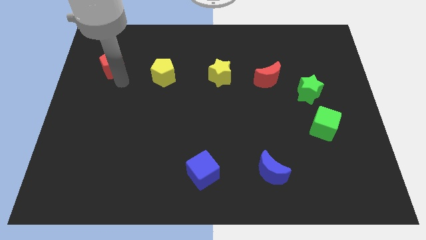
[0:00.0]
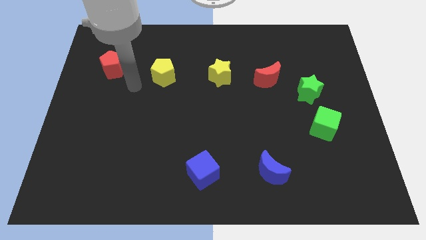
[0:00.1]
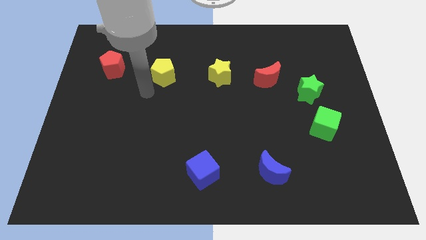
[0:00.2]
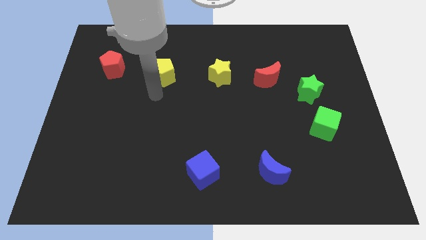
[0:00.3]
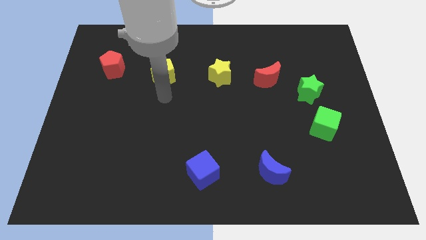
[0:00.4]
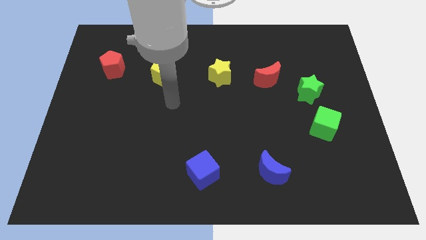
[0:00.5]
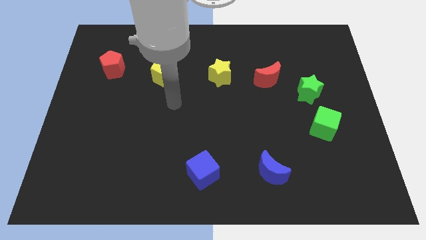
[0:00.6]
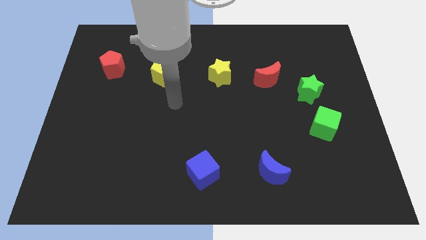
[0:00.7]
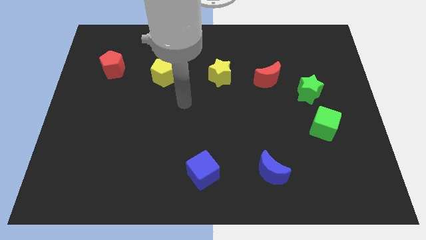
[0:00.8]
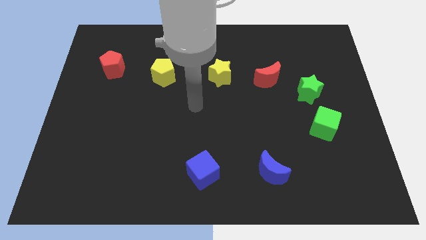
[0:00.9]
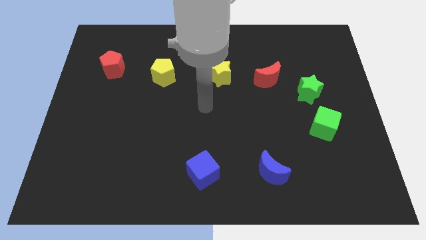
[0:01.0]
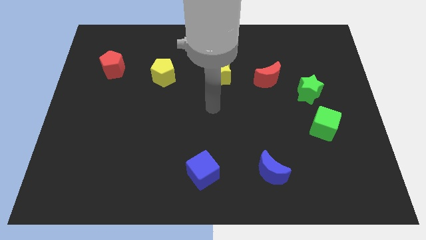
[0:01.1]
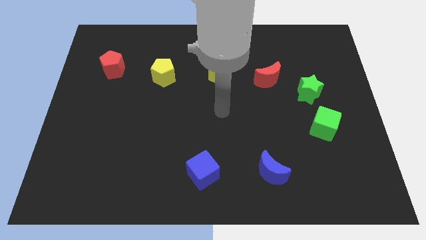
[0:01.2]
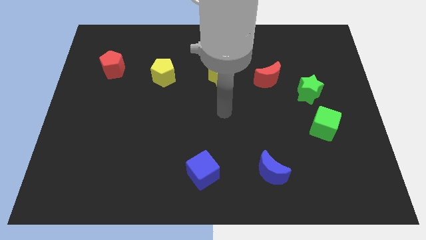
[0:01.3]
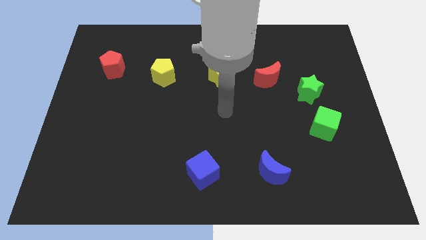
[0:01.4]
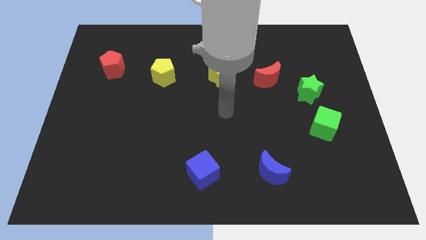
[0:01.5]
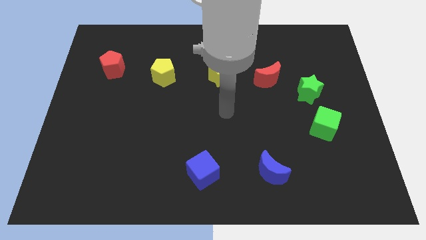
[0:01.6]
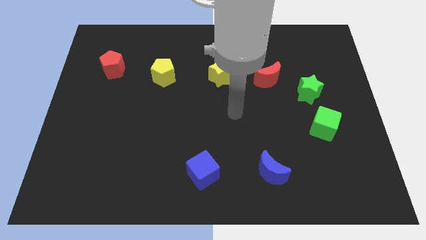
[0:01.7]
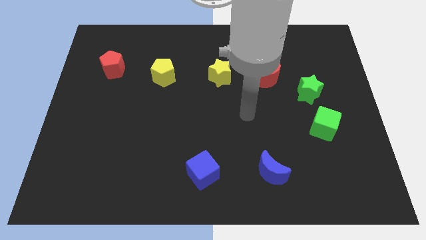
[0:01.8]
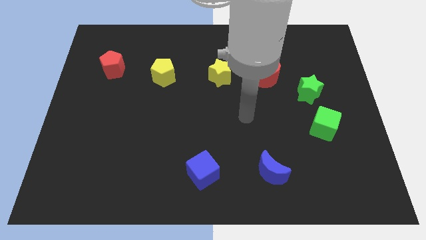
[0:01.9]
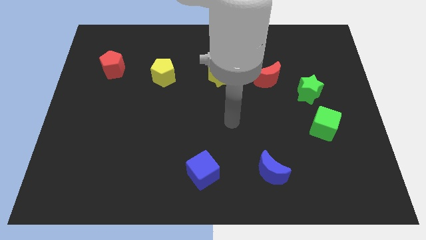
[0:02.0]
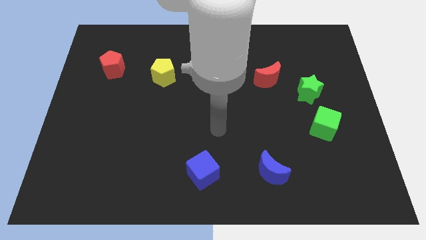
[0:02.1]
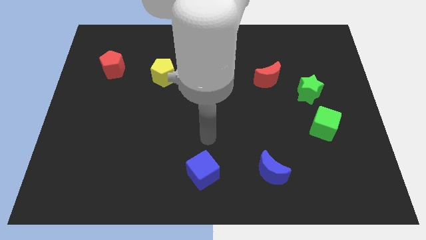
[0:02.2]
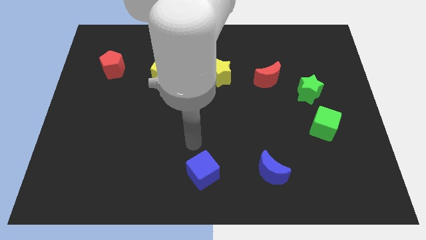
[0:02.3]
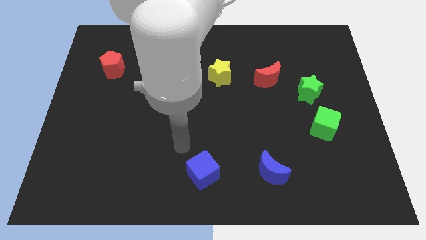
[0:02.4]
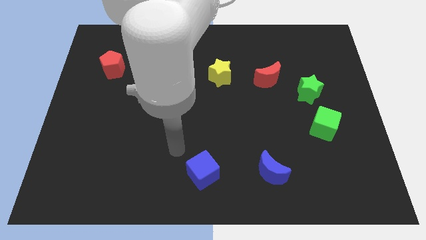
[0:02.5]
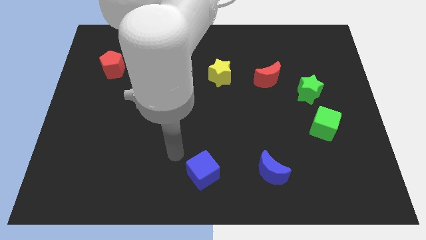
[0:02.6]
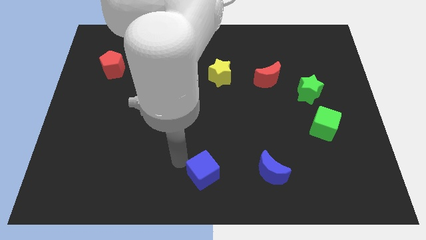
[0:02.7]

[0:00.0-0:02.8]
touch the top left side of blue cube

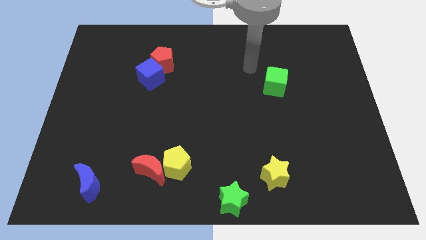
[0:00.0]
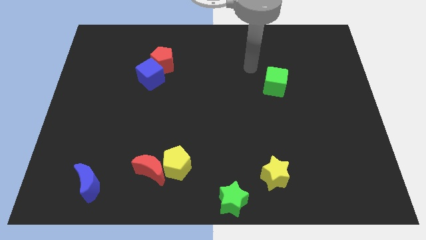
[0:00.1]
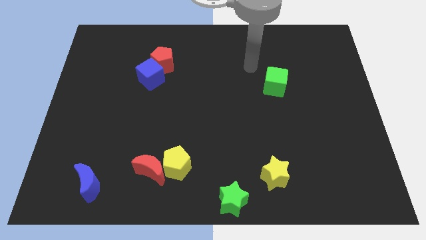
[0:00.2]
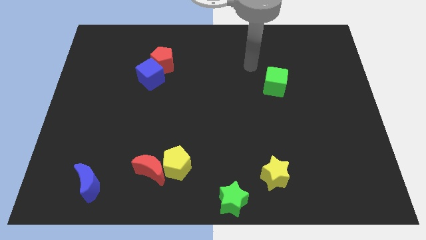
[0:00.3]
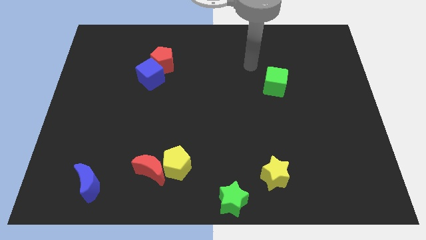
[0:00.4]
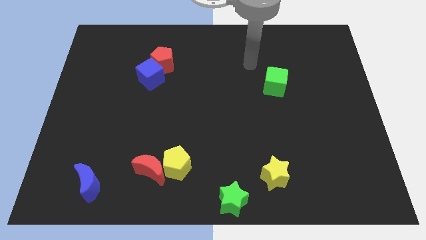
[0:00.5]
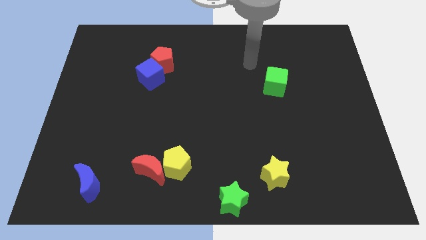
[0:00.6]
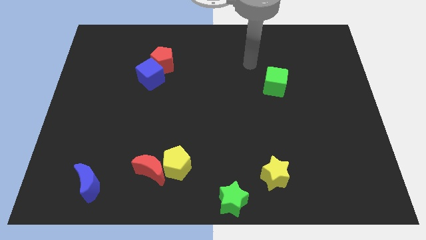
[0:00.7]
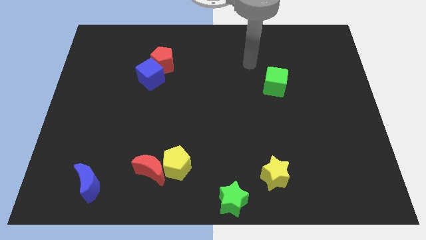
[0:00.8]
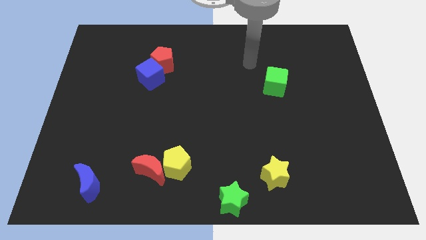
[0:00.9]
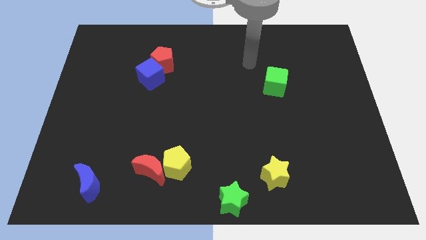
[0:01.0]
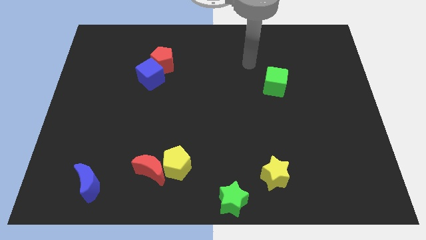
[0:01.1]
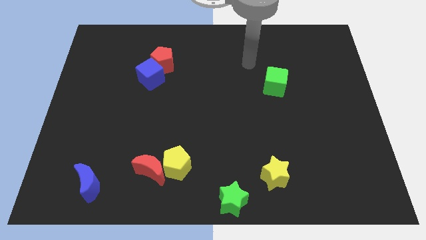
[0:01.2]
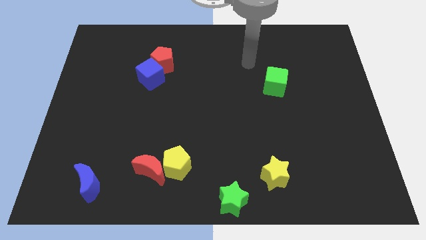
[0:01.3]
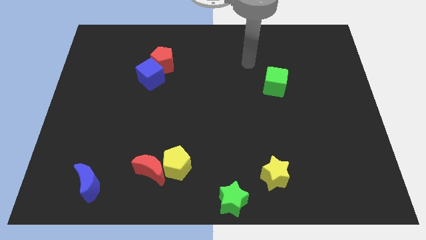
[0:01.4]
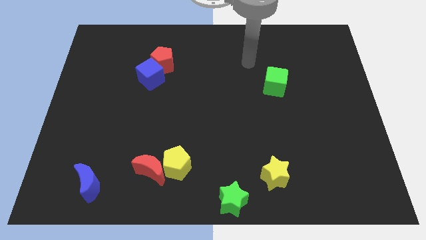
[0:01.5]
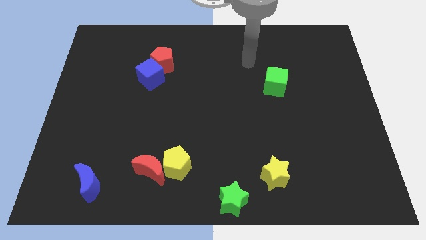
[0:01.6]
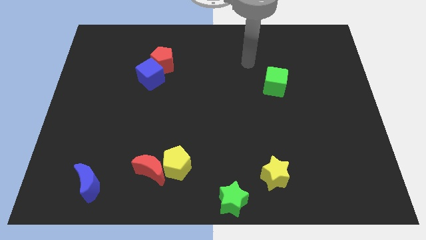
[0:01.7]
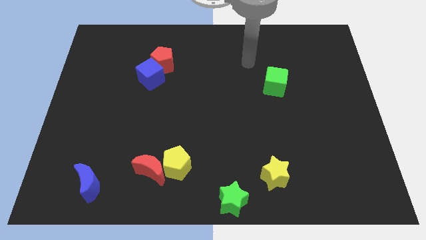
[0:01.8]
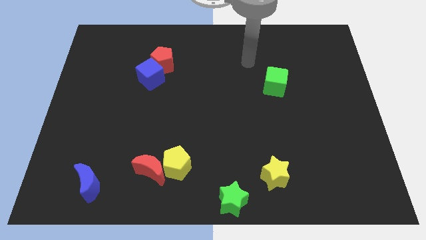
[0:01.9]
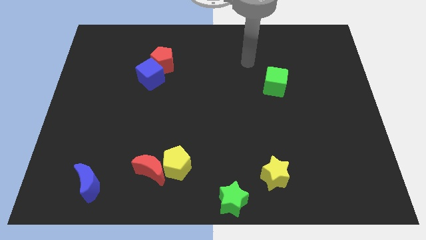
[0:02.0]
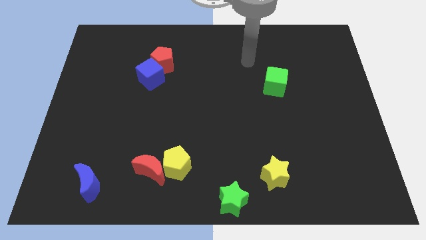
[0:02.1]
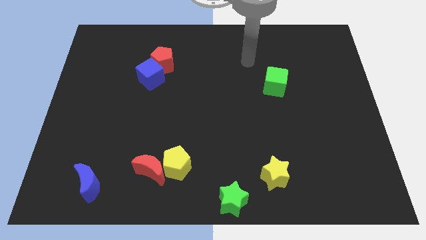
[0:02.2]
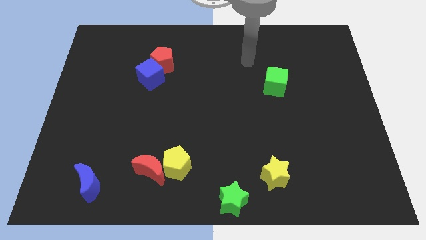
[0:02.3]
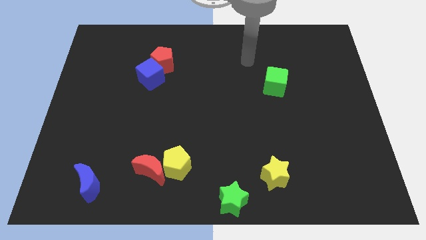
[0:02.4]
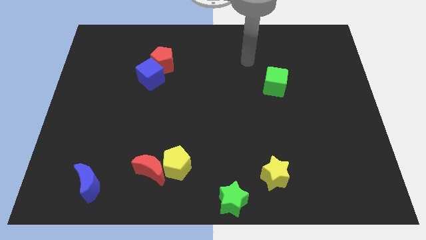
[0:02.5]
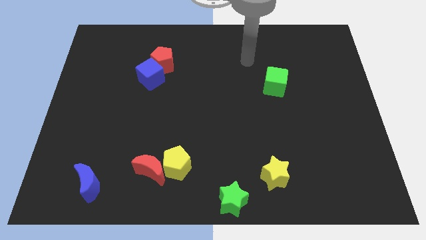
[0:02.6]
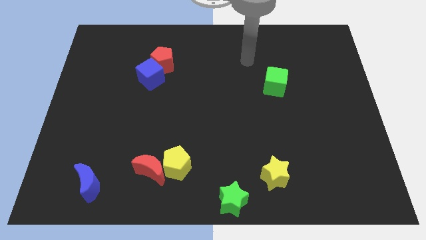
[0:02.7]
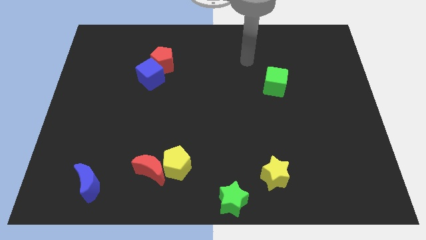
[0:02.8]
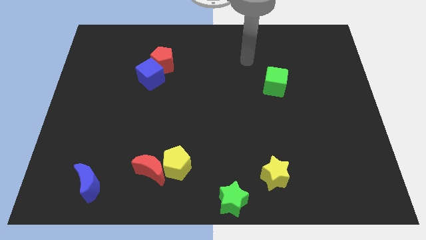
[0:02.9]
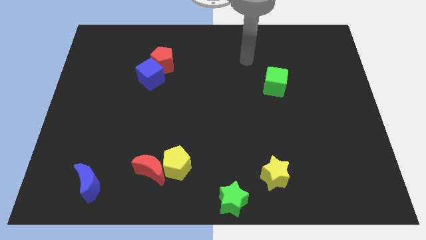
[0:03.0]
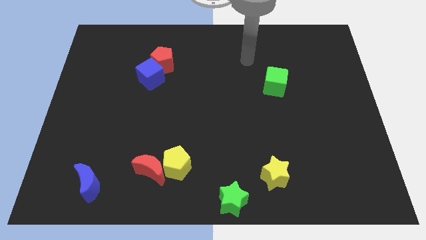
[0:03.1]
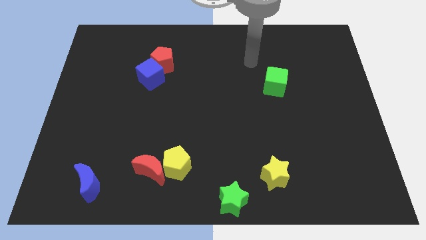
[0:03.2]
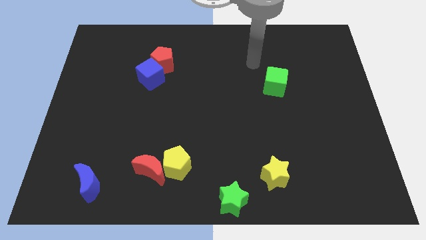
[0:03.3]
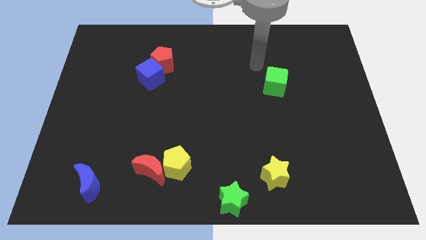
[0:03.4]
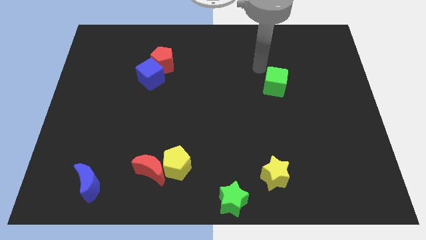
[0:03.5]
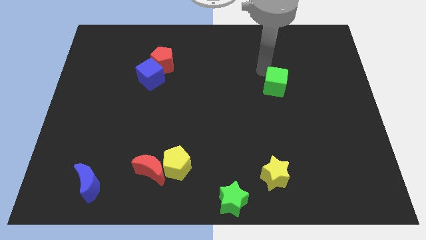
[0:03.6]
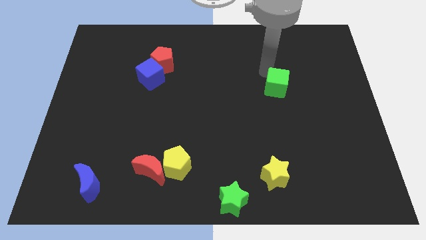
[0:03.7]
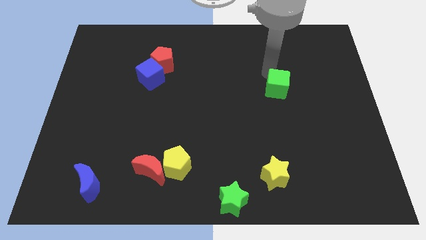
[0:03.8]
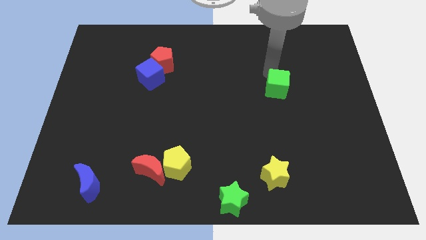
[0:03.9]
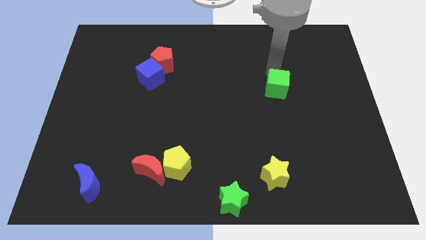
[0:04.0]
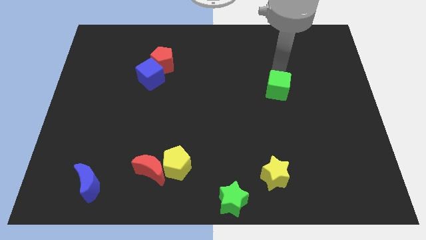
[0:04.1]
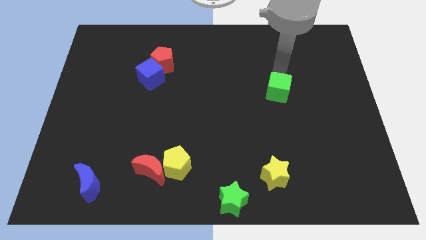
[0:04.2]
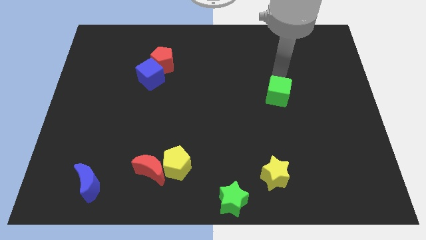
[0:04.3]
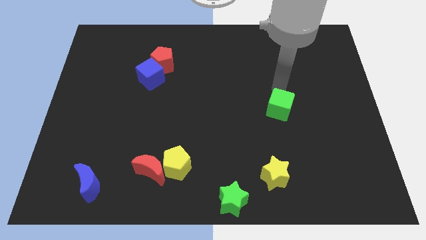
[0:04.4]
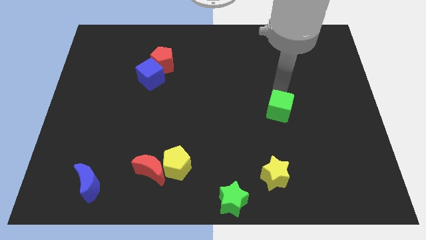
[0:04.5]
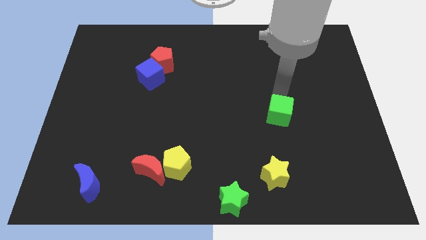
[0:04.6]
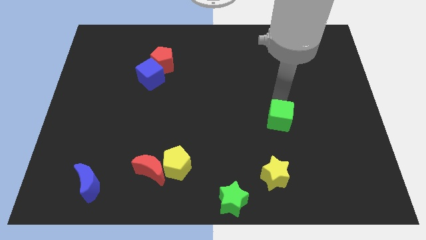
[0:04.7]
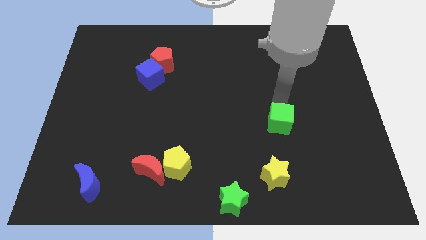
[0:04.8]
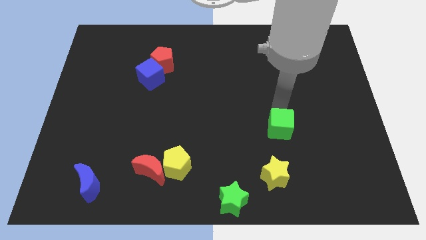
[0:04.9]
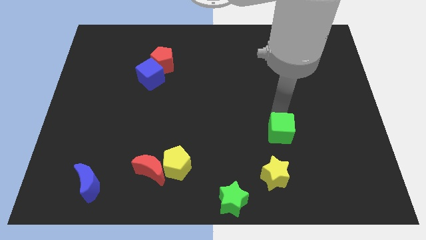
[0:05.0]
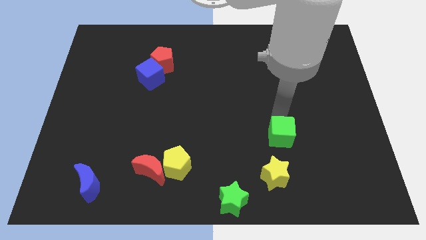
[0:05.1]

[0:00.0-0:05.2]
push the green cube towards the yellow pentagon

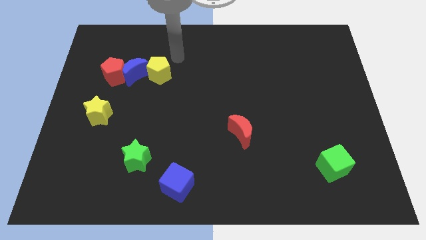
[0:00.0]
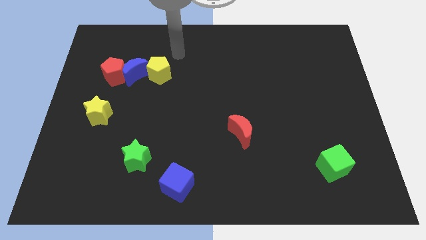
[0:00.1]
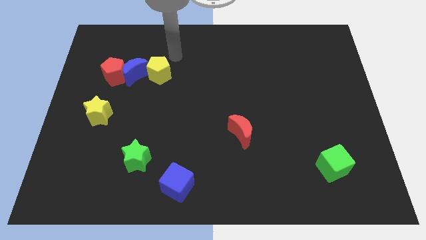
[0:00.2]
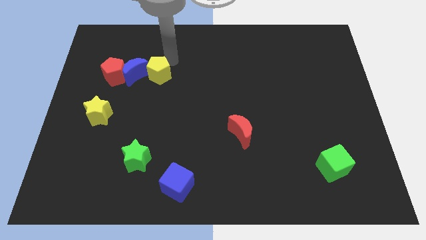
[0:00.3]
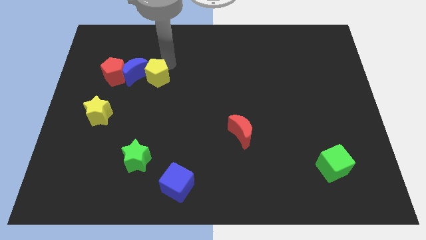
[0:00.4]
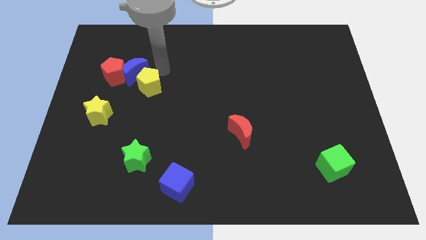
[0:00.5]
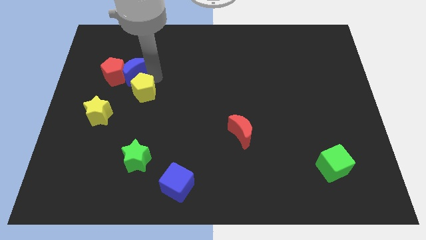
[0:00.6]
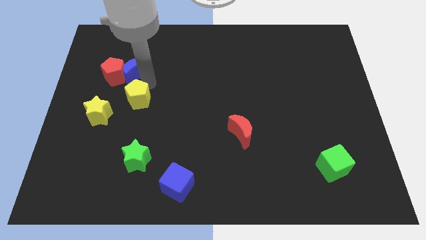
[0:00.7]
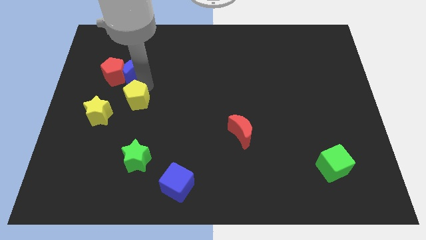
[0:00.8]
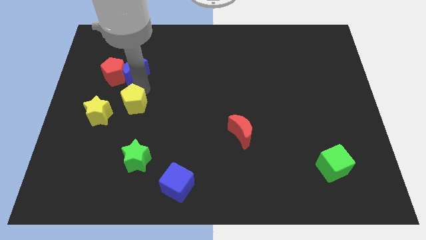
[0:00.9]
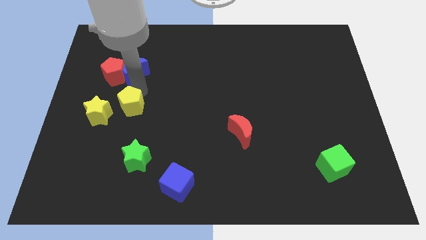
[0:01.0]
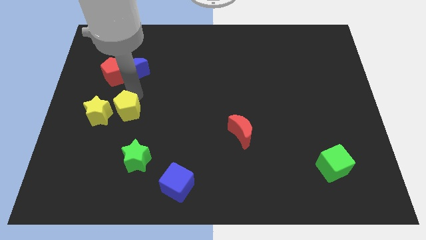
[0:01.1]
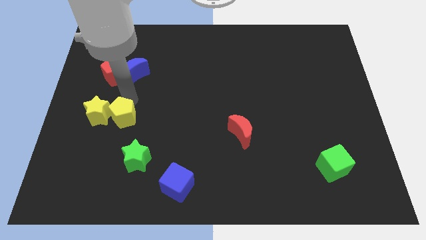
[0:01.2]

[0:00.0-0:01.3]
move the yellow pentagon to the right of the yellow star
